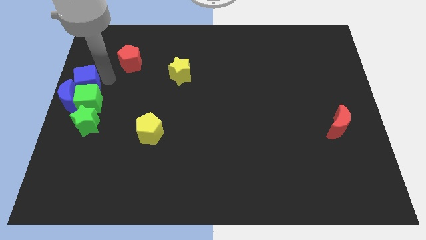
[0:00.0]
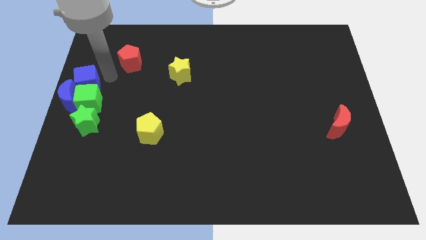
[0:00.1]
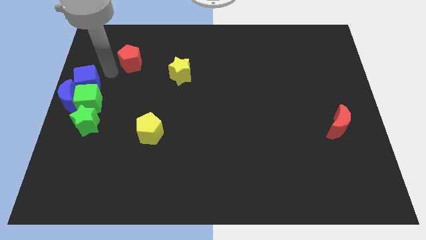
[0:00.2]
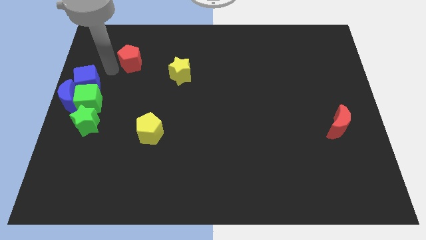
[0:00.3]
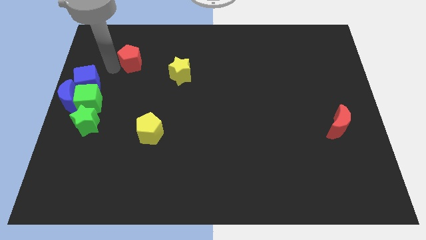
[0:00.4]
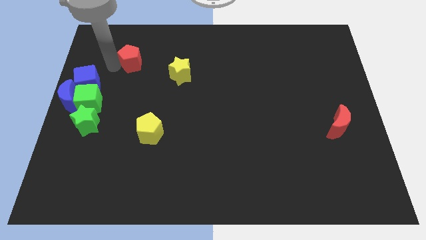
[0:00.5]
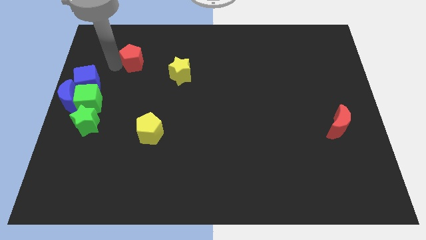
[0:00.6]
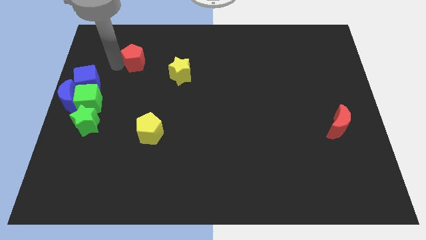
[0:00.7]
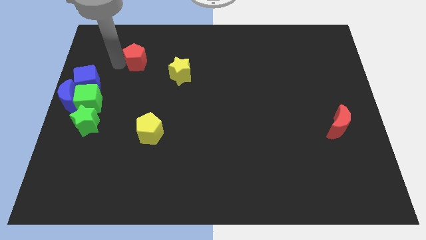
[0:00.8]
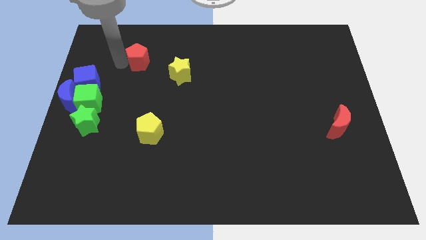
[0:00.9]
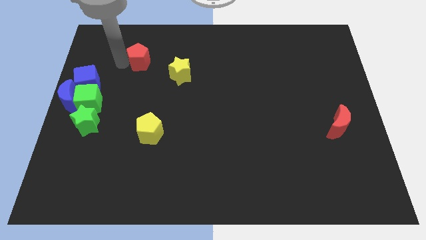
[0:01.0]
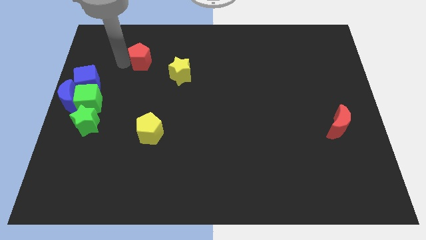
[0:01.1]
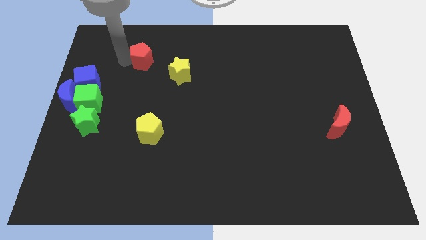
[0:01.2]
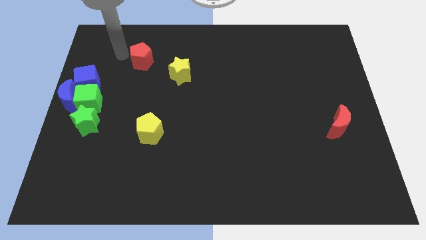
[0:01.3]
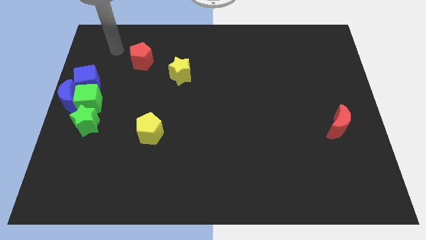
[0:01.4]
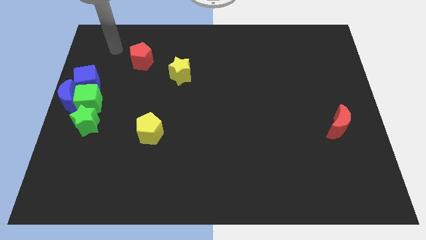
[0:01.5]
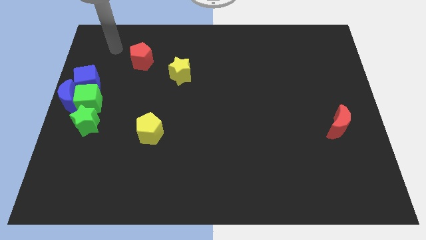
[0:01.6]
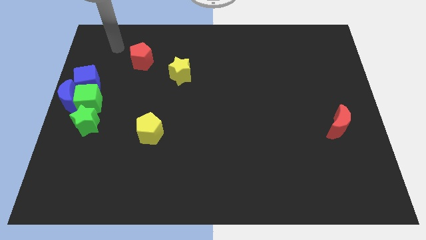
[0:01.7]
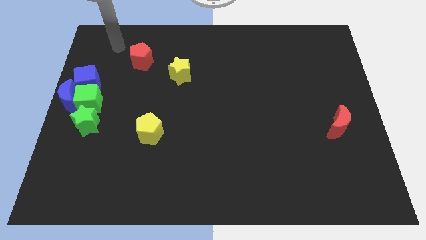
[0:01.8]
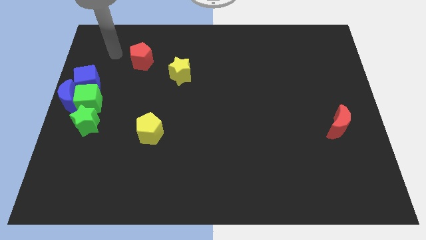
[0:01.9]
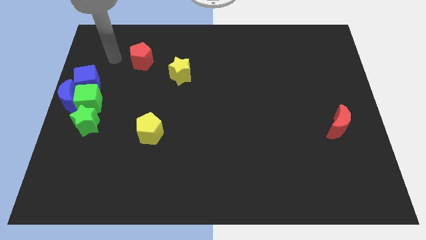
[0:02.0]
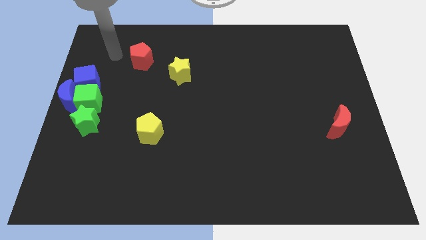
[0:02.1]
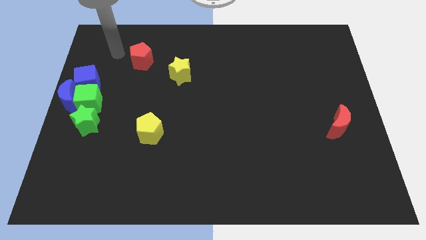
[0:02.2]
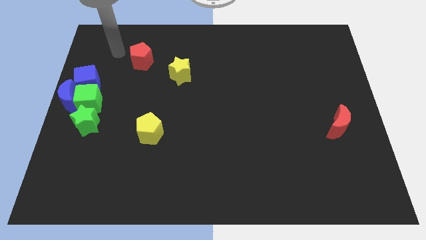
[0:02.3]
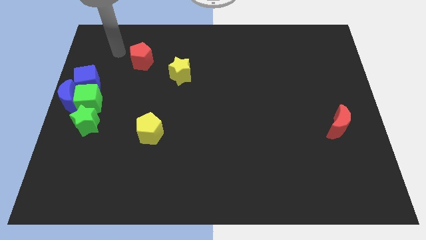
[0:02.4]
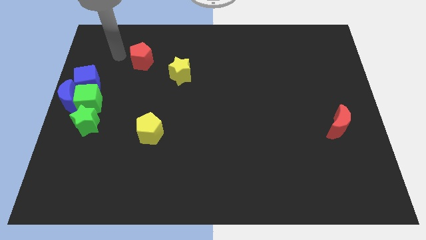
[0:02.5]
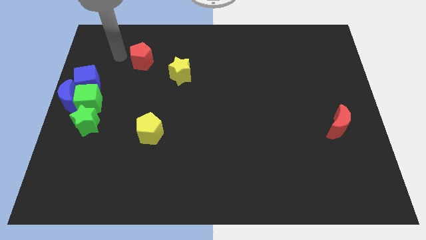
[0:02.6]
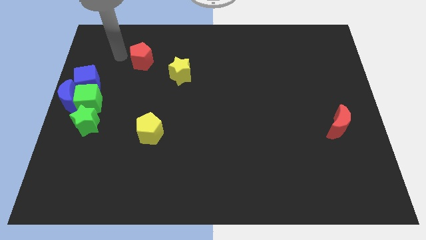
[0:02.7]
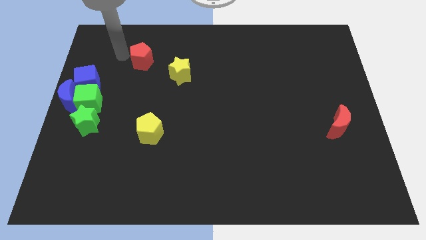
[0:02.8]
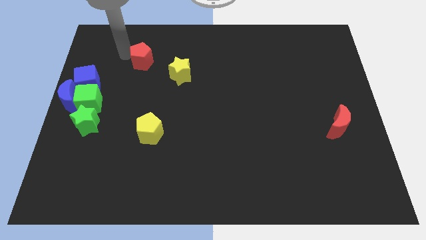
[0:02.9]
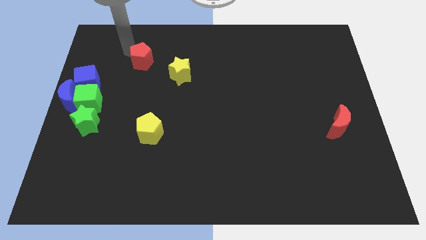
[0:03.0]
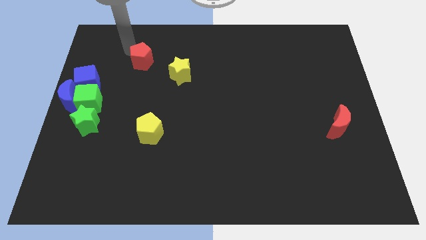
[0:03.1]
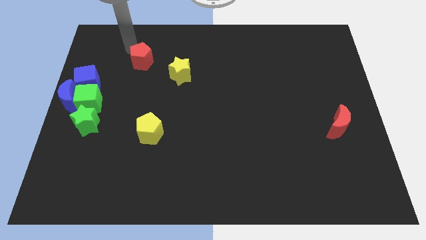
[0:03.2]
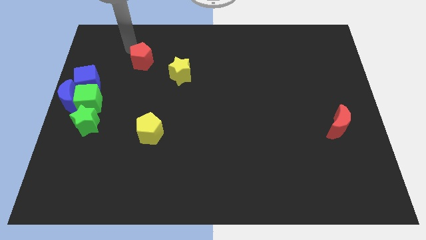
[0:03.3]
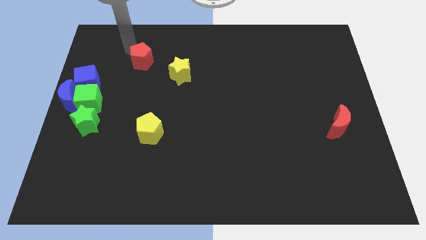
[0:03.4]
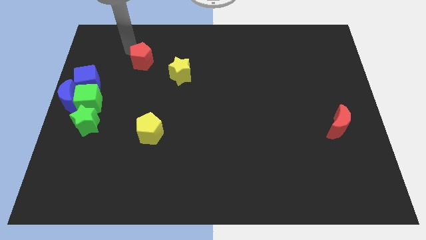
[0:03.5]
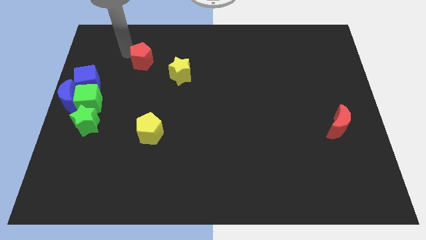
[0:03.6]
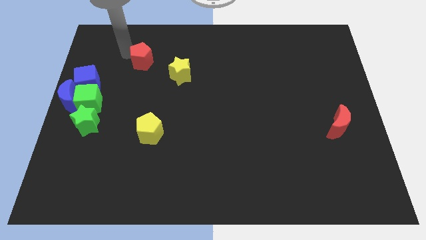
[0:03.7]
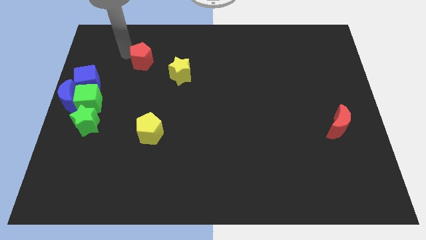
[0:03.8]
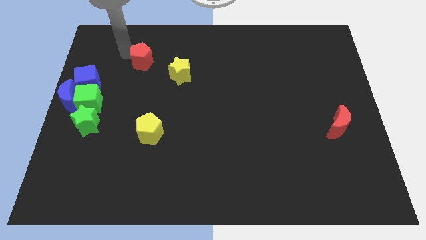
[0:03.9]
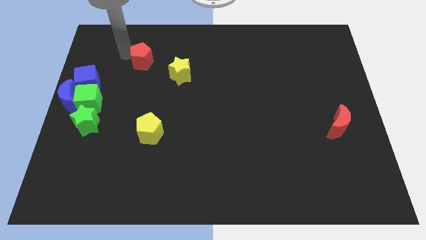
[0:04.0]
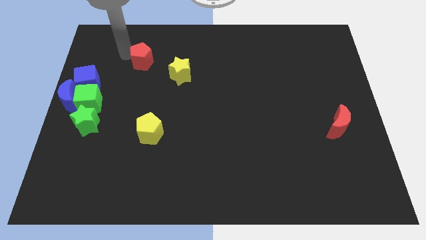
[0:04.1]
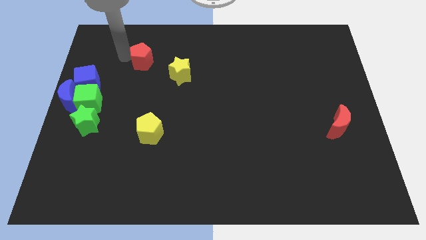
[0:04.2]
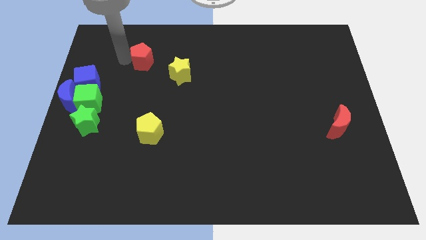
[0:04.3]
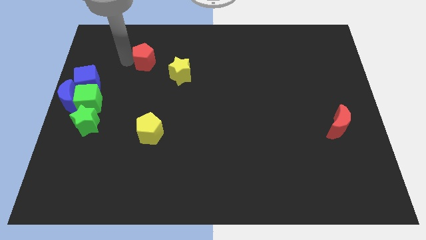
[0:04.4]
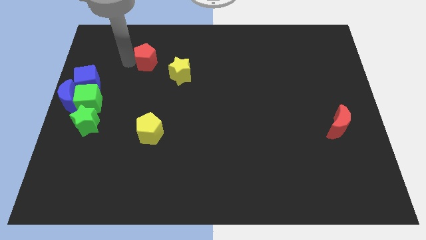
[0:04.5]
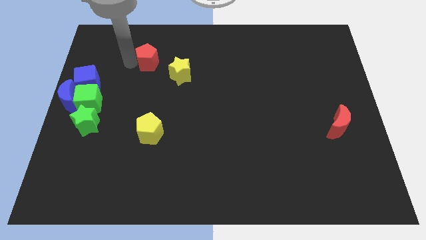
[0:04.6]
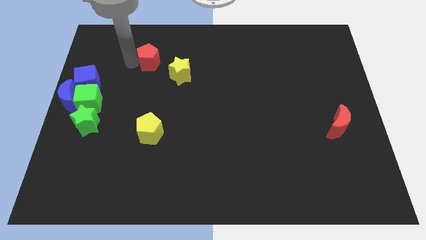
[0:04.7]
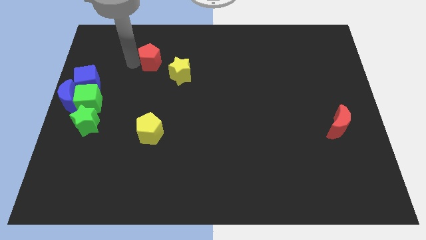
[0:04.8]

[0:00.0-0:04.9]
place red pentagon at the top left side of yellow star

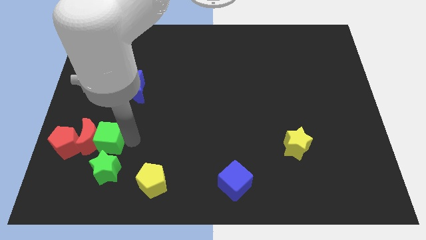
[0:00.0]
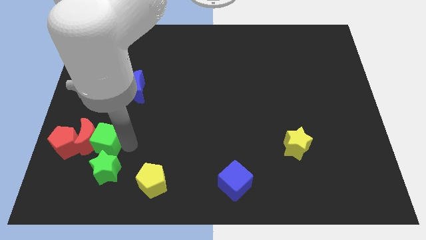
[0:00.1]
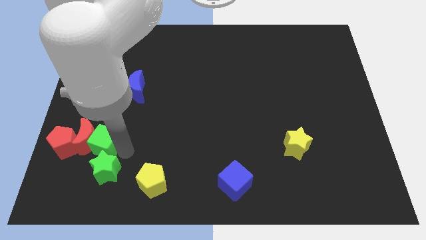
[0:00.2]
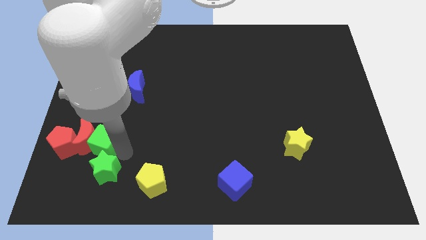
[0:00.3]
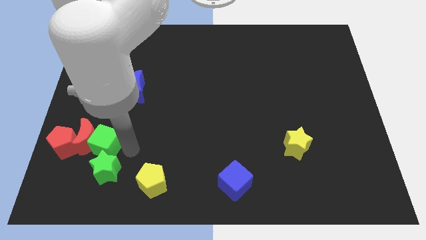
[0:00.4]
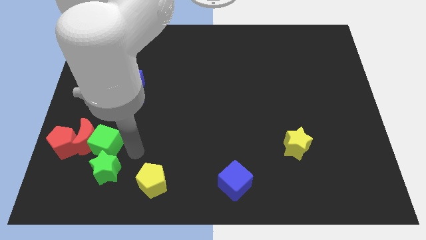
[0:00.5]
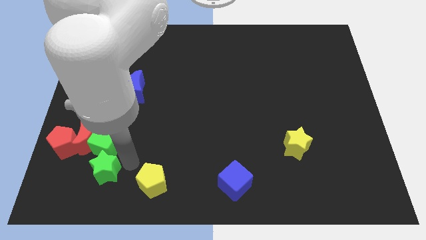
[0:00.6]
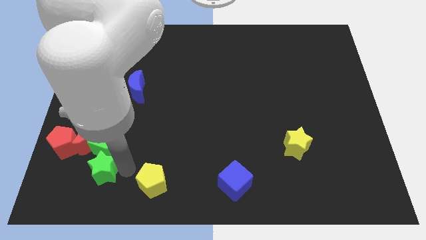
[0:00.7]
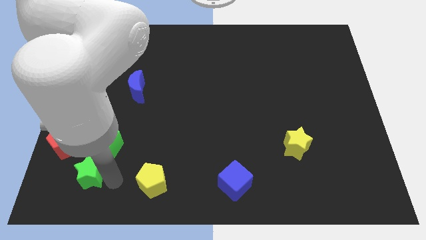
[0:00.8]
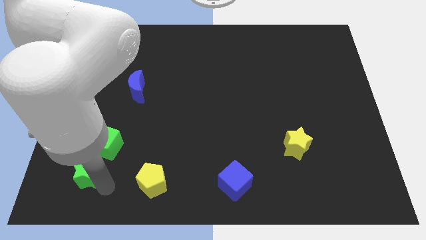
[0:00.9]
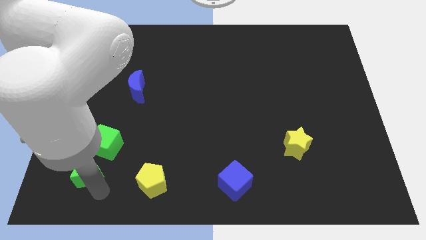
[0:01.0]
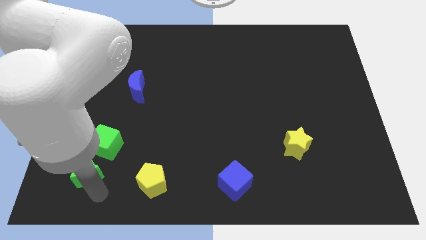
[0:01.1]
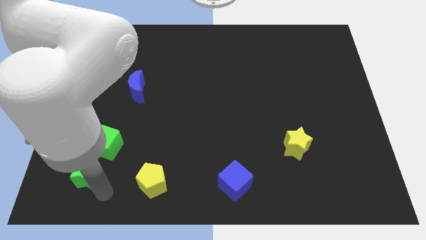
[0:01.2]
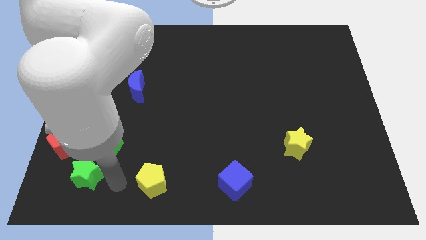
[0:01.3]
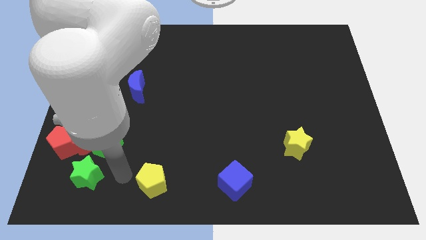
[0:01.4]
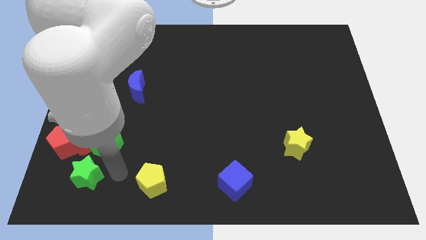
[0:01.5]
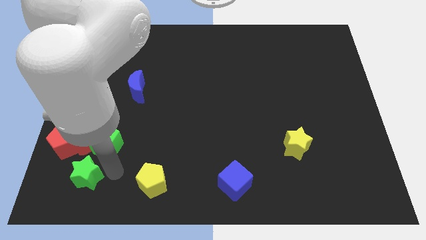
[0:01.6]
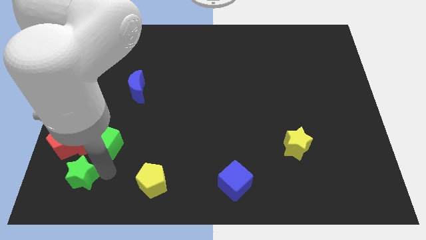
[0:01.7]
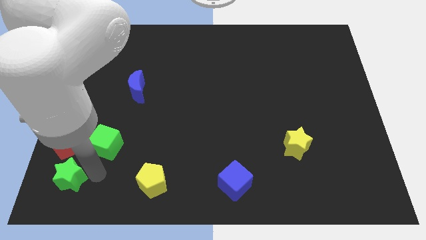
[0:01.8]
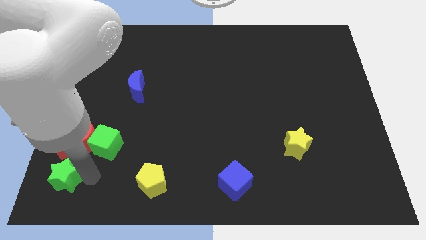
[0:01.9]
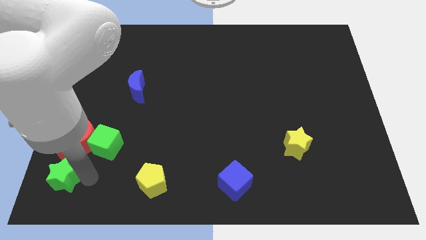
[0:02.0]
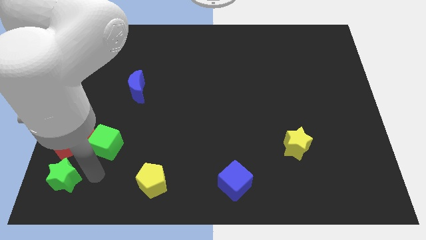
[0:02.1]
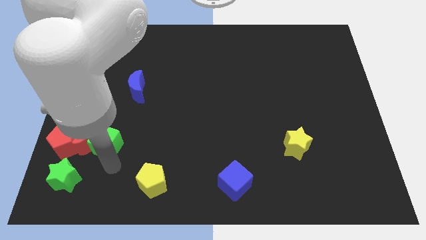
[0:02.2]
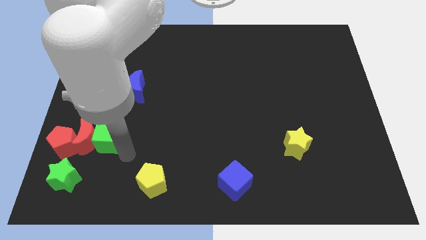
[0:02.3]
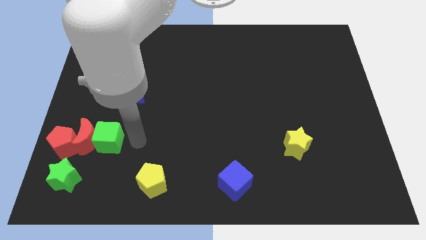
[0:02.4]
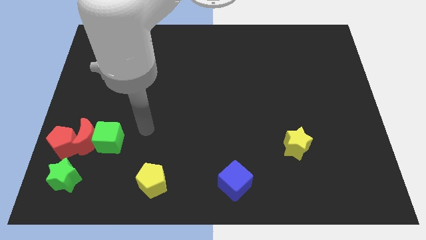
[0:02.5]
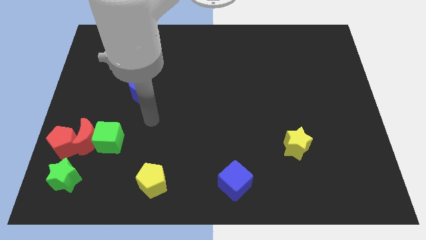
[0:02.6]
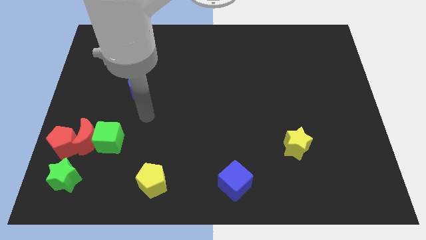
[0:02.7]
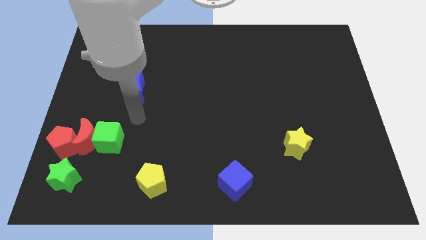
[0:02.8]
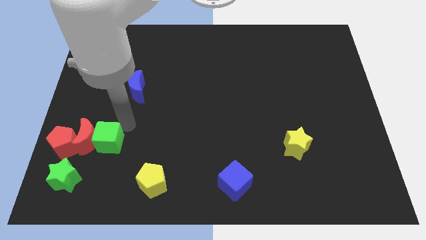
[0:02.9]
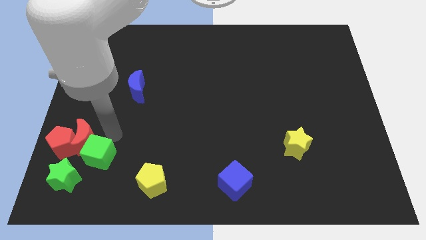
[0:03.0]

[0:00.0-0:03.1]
place green star to the bottom of red pentagon

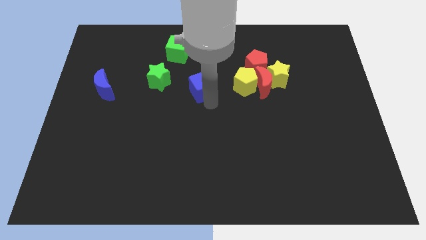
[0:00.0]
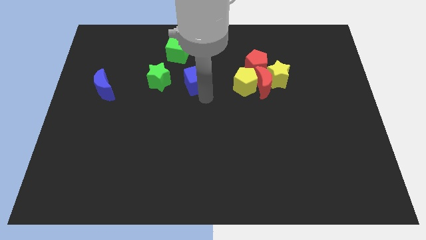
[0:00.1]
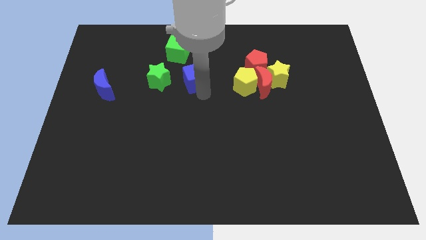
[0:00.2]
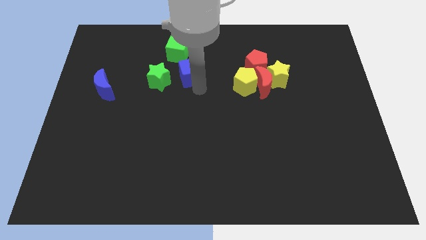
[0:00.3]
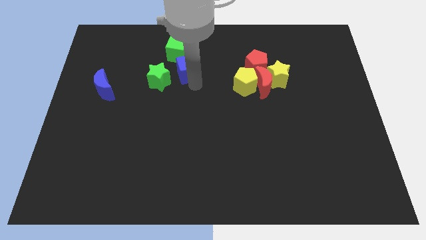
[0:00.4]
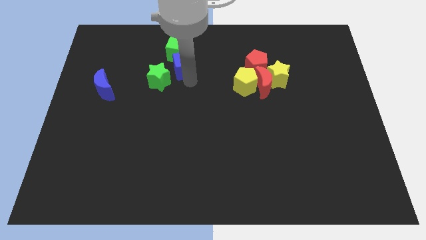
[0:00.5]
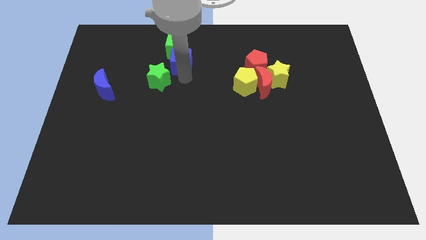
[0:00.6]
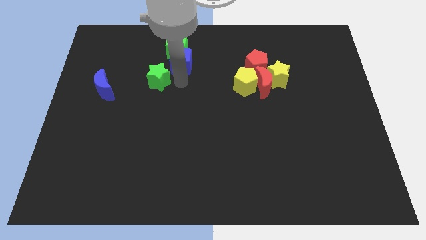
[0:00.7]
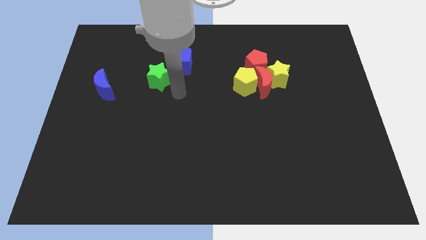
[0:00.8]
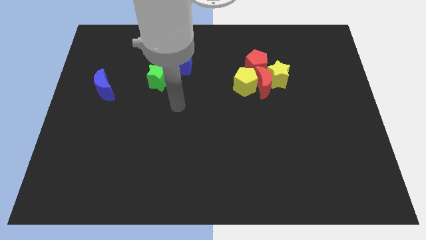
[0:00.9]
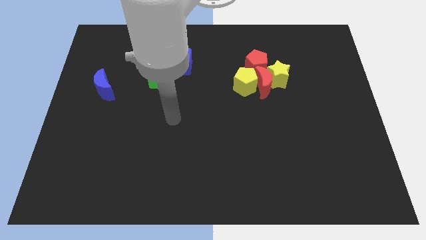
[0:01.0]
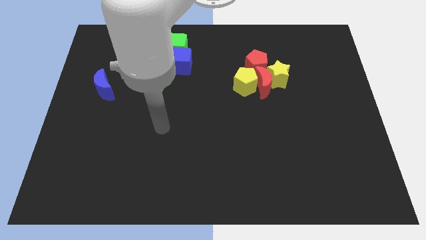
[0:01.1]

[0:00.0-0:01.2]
move the blue cube into the green cube
